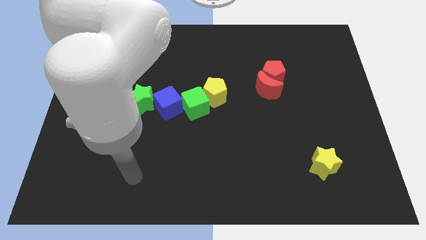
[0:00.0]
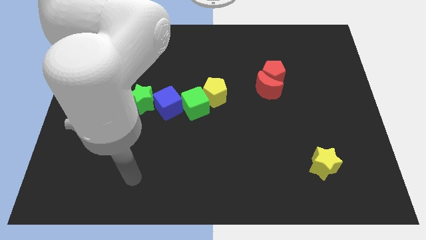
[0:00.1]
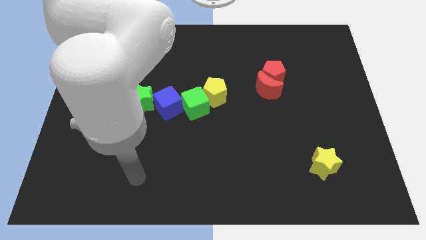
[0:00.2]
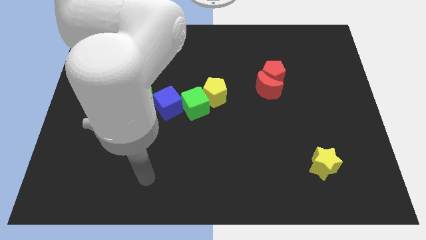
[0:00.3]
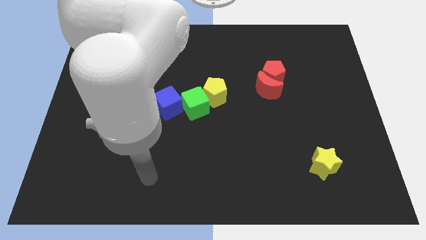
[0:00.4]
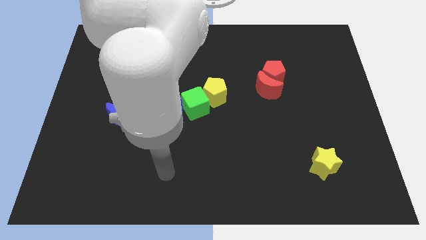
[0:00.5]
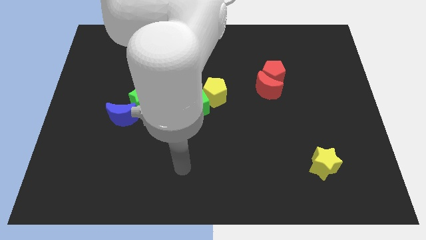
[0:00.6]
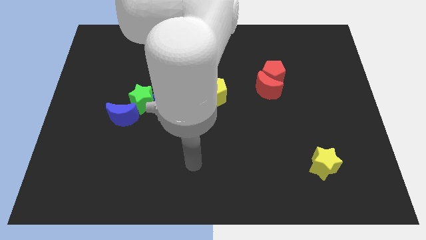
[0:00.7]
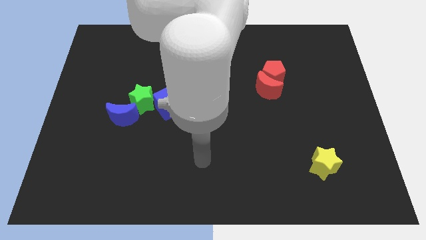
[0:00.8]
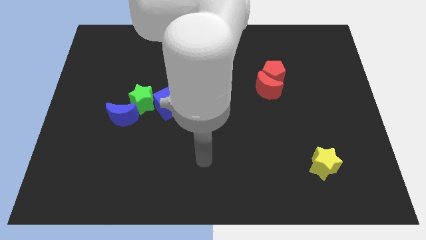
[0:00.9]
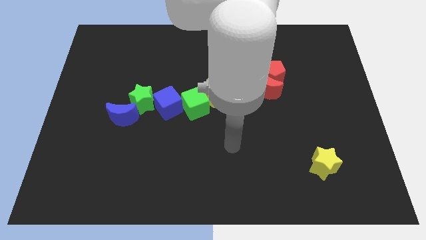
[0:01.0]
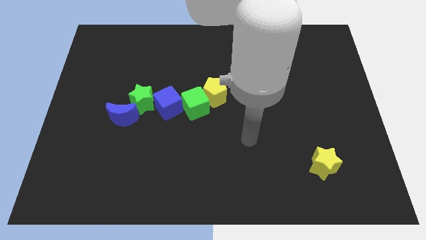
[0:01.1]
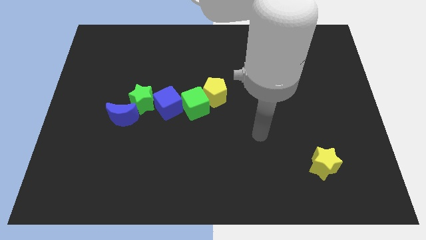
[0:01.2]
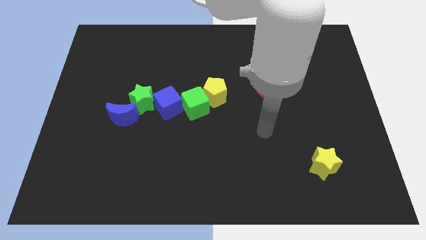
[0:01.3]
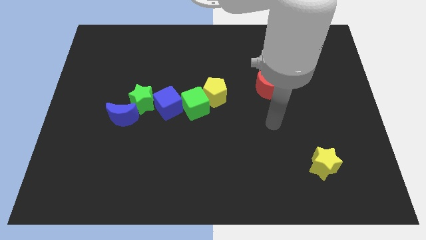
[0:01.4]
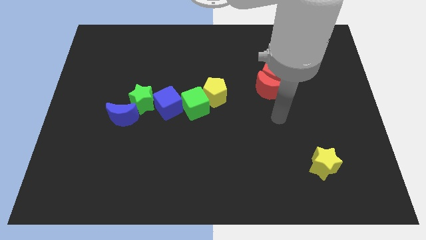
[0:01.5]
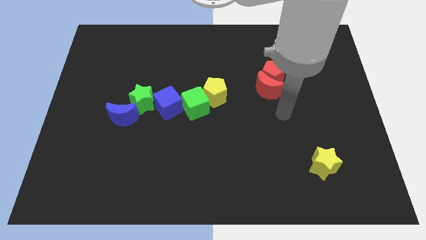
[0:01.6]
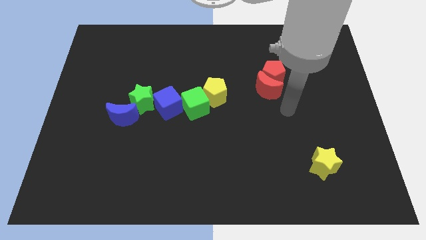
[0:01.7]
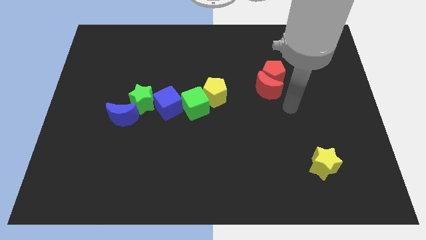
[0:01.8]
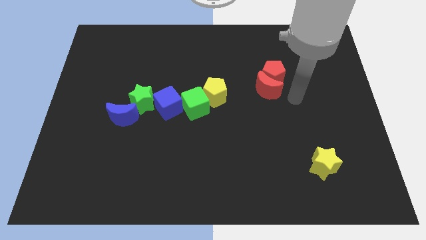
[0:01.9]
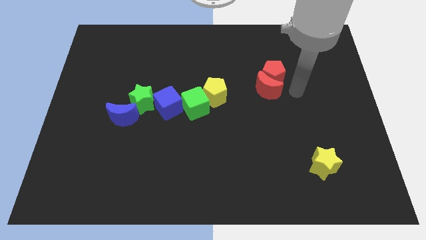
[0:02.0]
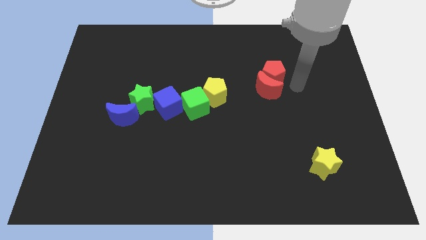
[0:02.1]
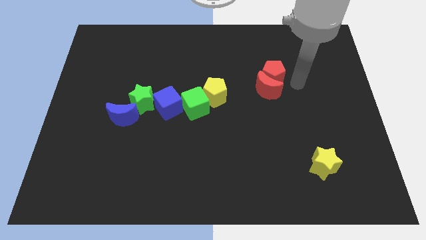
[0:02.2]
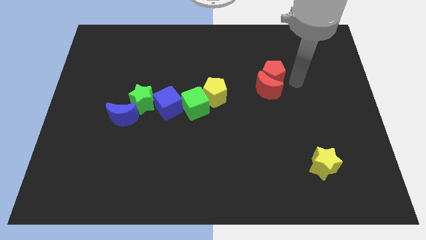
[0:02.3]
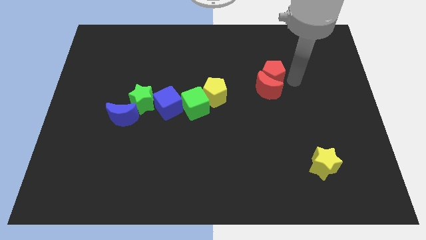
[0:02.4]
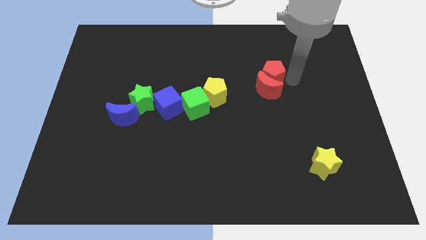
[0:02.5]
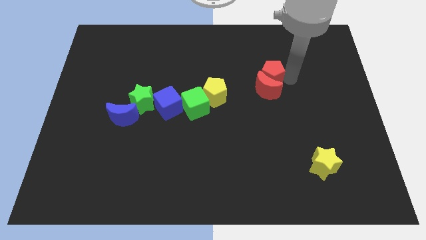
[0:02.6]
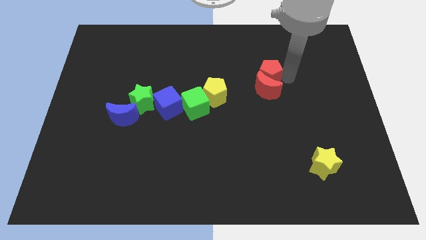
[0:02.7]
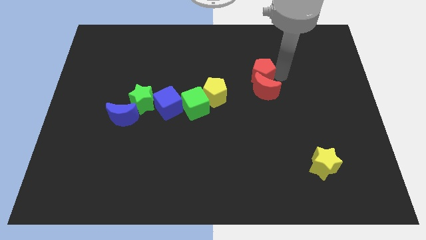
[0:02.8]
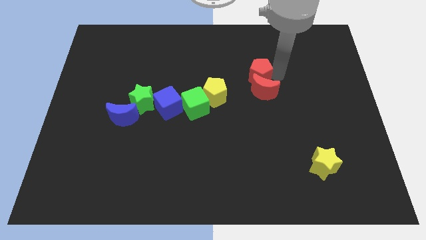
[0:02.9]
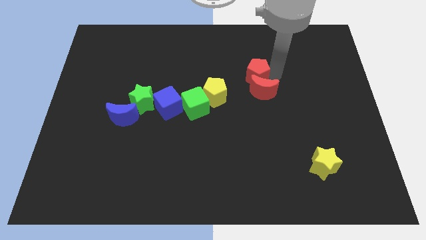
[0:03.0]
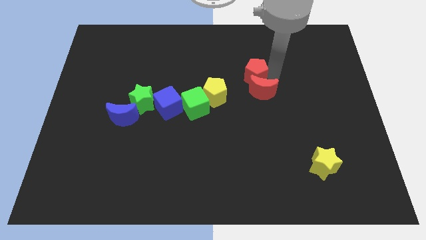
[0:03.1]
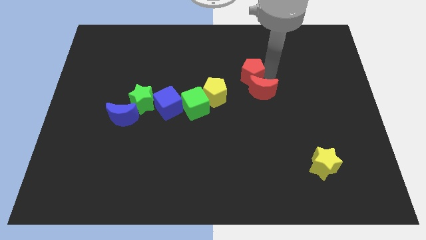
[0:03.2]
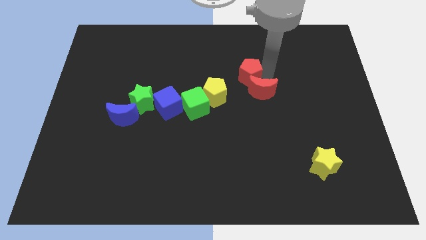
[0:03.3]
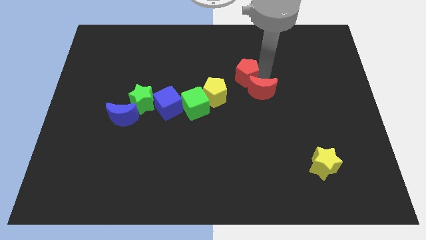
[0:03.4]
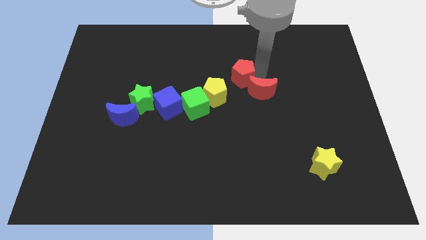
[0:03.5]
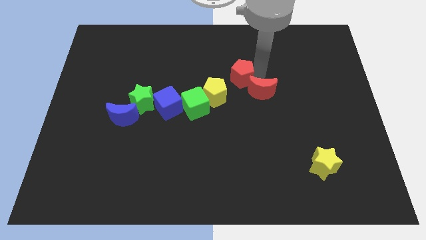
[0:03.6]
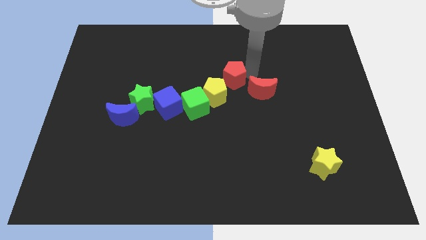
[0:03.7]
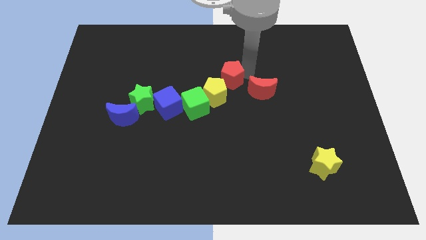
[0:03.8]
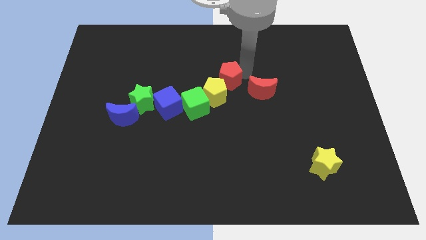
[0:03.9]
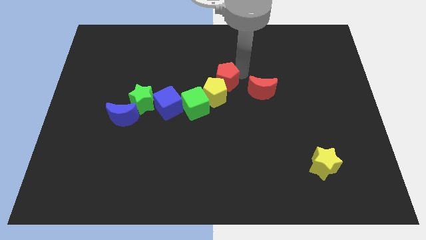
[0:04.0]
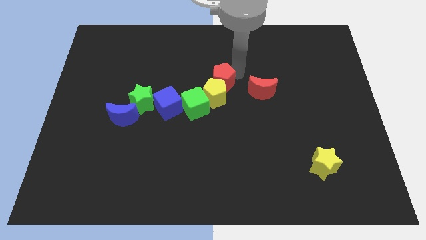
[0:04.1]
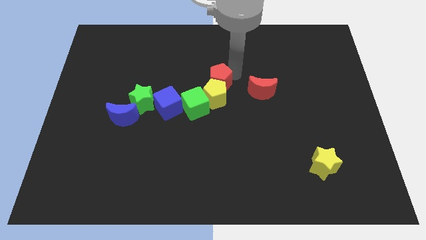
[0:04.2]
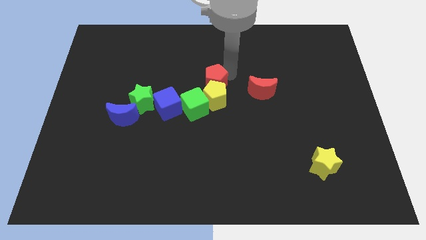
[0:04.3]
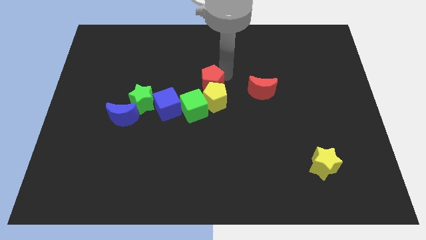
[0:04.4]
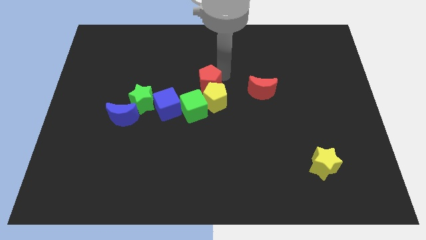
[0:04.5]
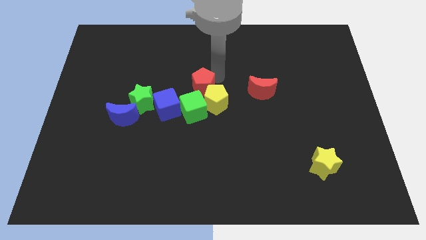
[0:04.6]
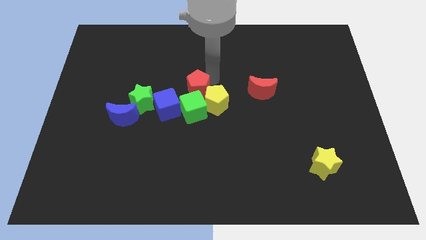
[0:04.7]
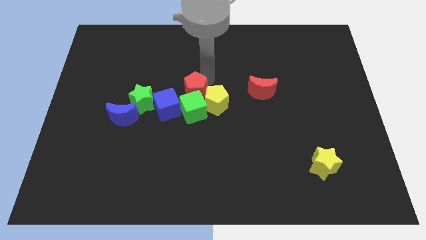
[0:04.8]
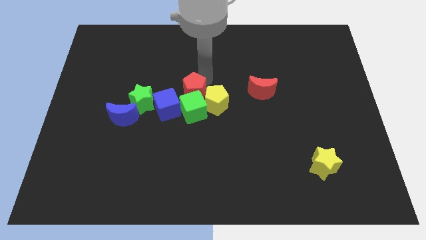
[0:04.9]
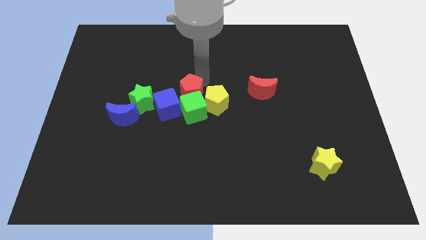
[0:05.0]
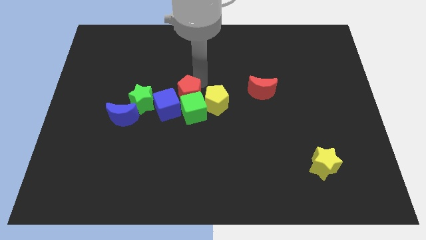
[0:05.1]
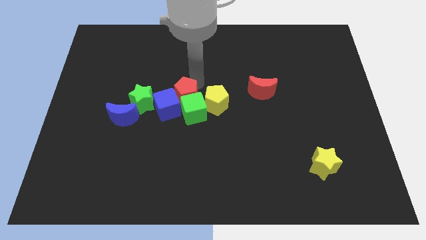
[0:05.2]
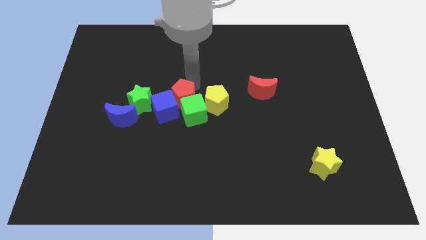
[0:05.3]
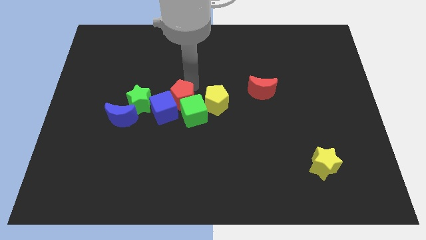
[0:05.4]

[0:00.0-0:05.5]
put the red pentagon close to the blue cube

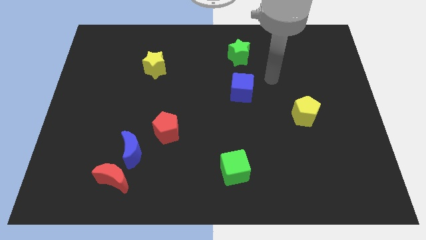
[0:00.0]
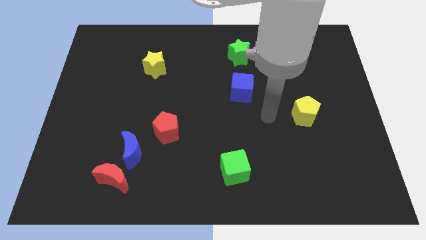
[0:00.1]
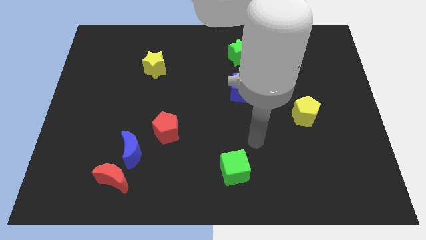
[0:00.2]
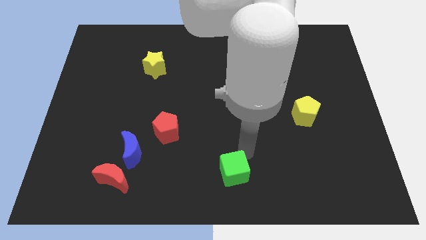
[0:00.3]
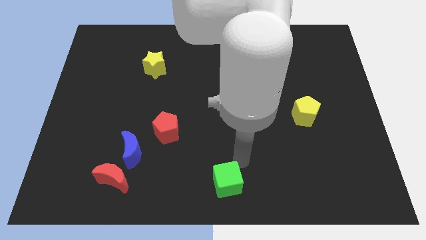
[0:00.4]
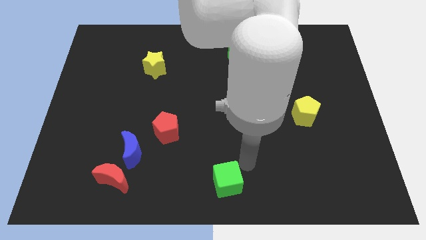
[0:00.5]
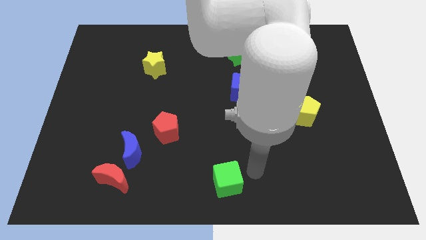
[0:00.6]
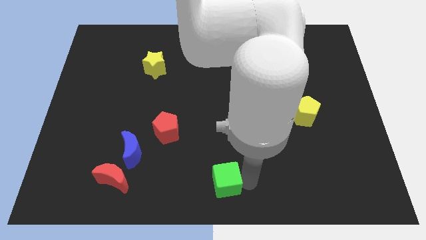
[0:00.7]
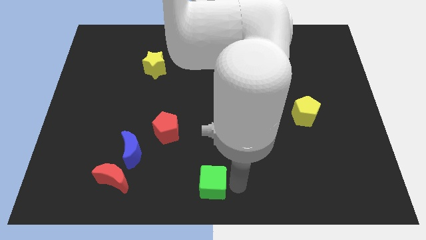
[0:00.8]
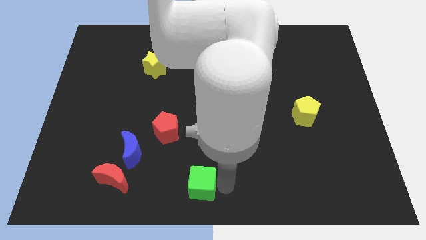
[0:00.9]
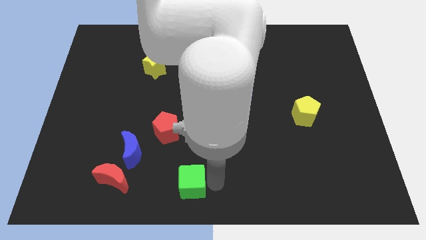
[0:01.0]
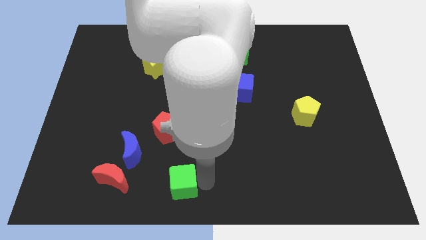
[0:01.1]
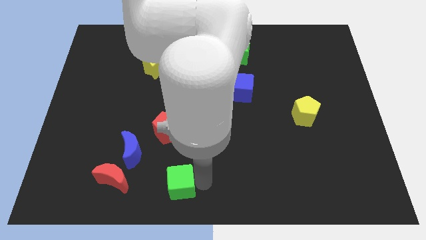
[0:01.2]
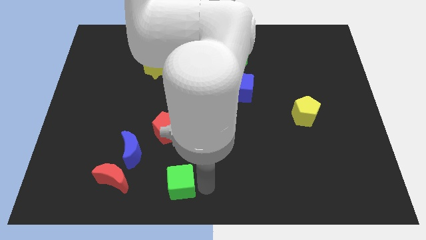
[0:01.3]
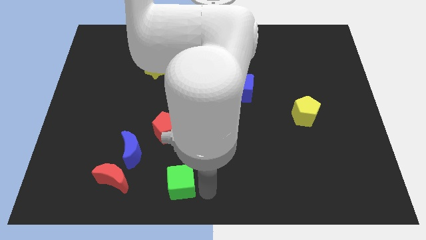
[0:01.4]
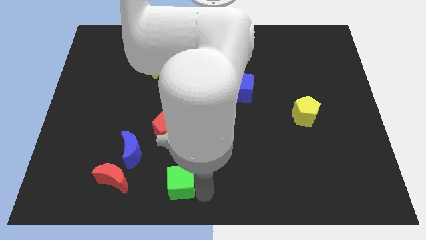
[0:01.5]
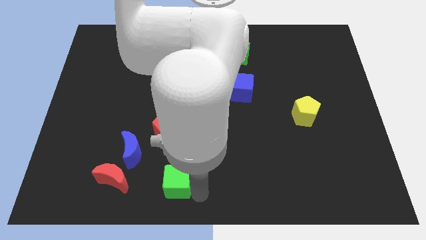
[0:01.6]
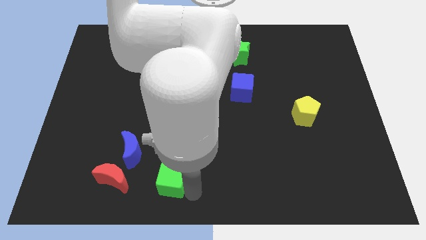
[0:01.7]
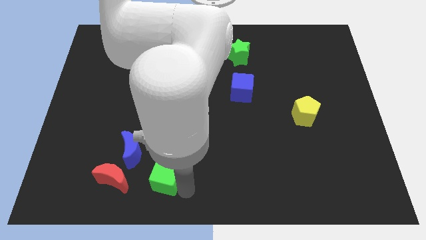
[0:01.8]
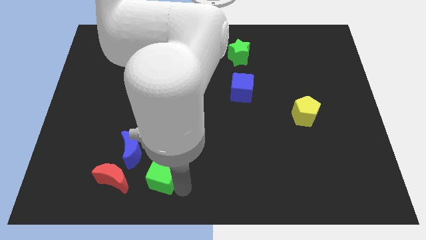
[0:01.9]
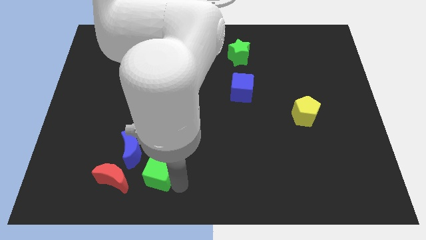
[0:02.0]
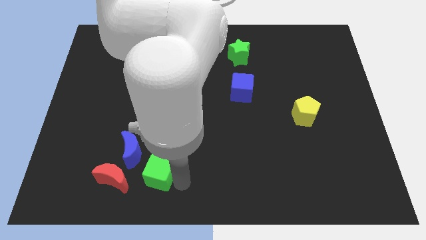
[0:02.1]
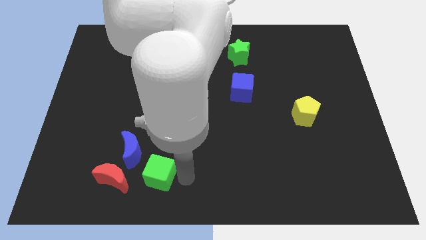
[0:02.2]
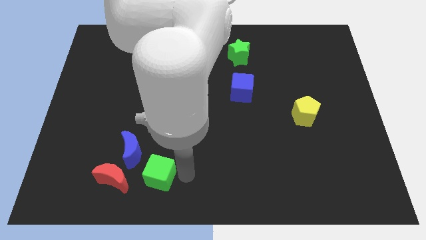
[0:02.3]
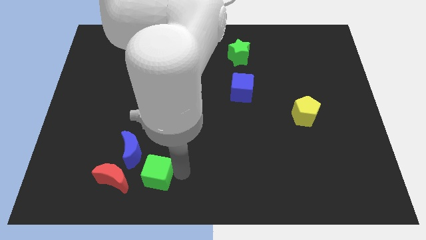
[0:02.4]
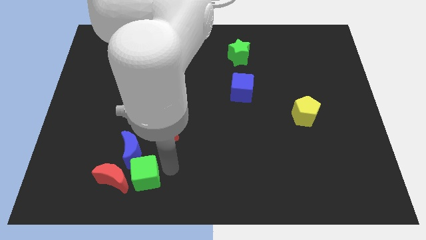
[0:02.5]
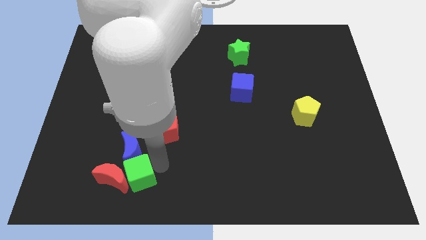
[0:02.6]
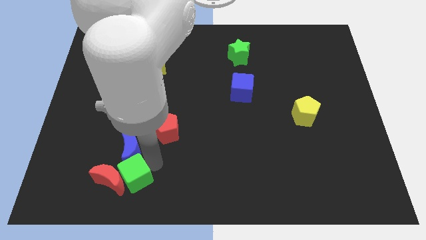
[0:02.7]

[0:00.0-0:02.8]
slide the green cube to the red moon

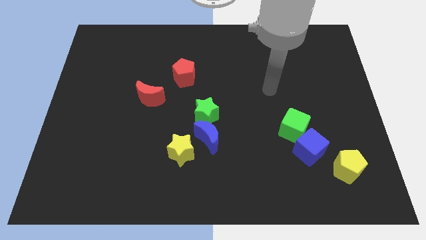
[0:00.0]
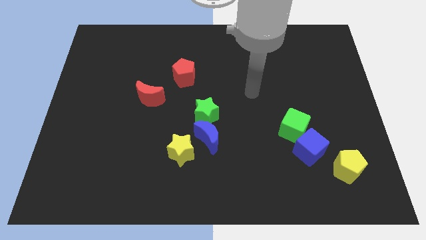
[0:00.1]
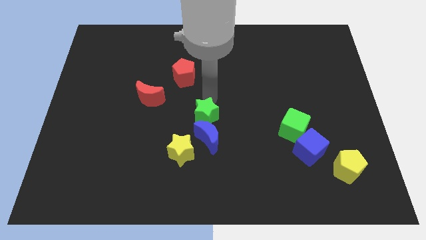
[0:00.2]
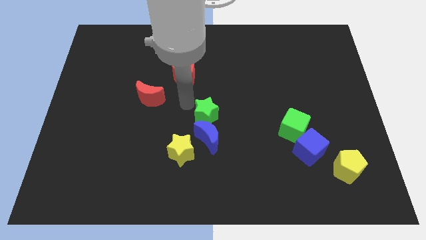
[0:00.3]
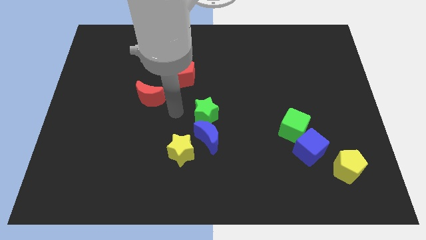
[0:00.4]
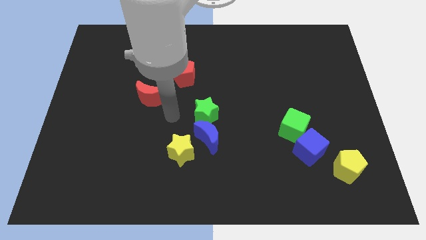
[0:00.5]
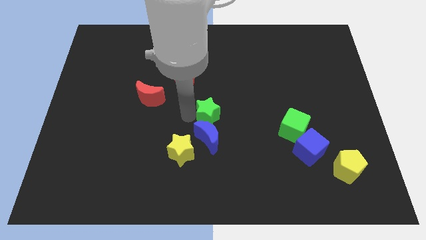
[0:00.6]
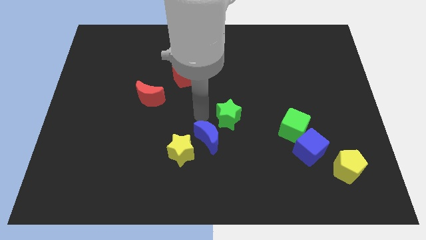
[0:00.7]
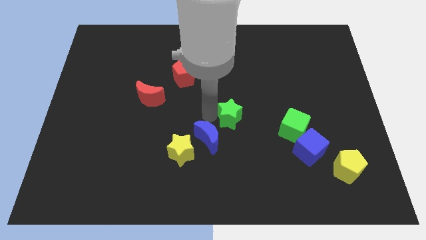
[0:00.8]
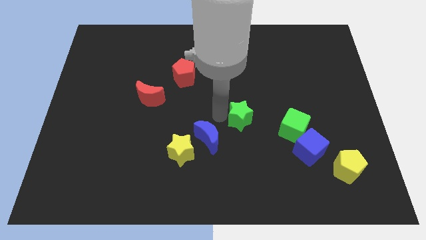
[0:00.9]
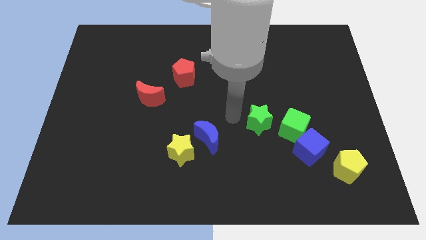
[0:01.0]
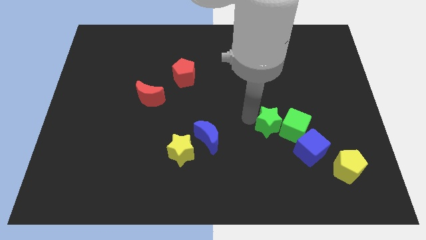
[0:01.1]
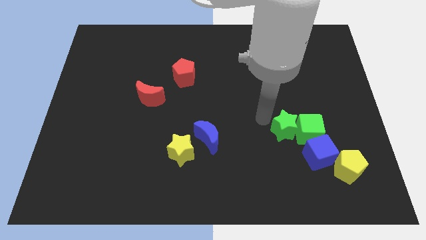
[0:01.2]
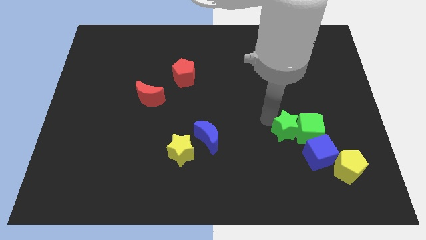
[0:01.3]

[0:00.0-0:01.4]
push the green star towards the green cube
